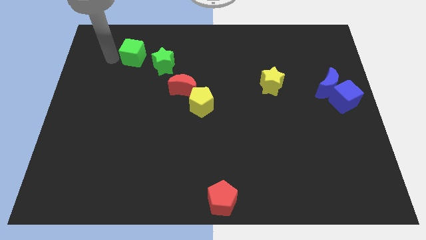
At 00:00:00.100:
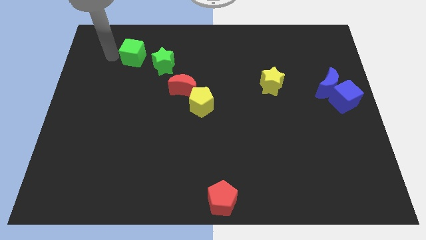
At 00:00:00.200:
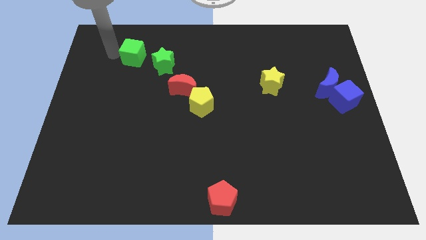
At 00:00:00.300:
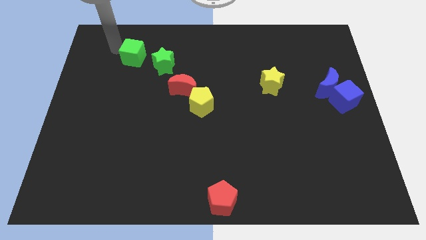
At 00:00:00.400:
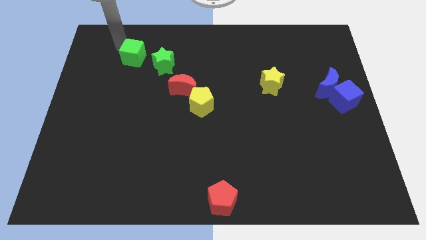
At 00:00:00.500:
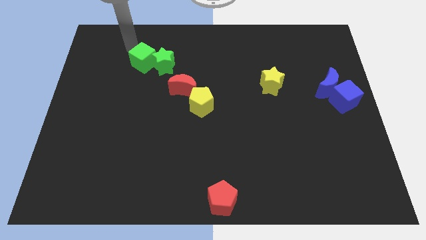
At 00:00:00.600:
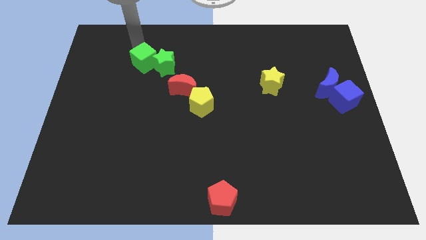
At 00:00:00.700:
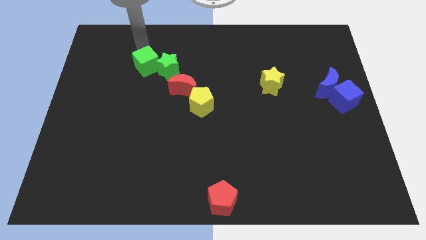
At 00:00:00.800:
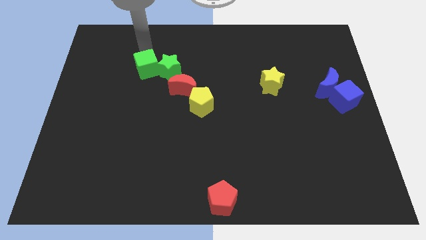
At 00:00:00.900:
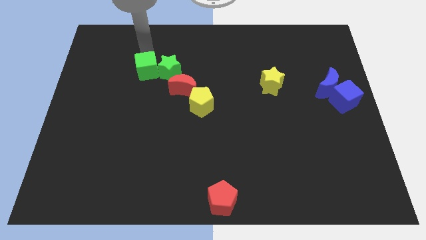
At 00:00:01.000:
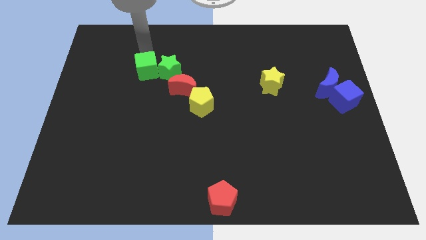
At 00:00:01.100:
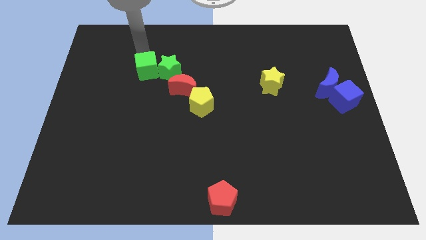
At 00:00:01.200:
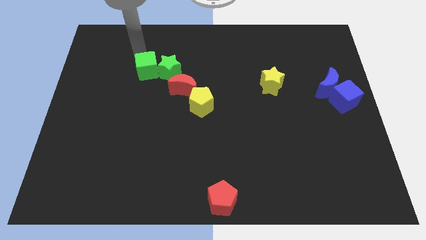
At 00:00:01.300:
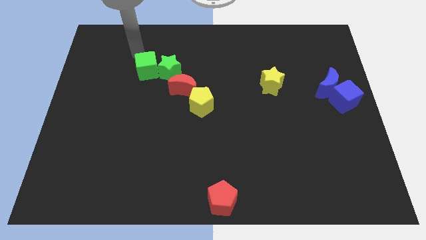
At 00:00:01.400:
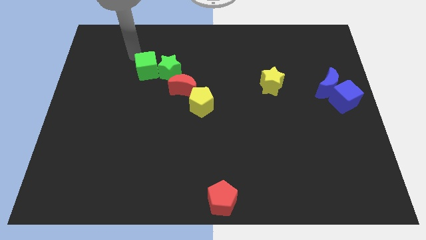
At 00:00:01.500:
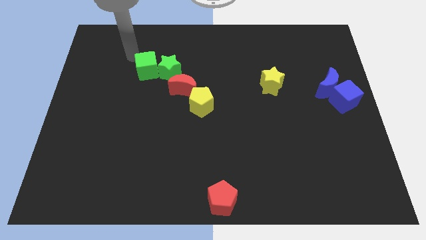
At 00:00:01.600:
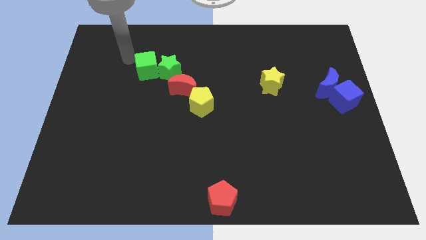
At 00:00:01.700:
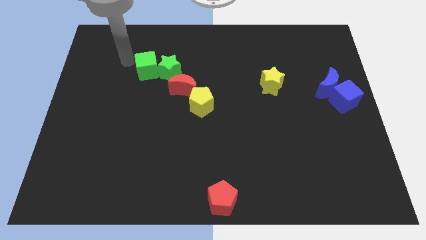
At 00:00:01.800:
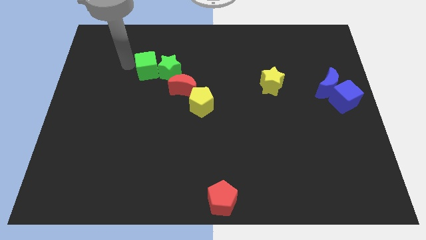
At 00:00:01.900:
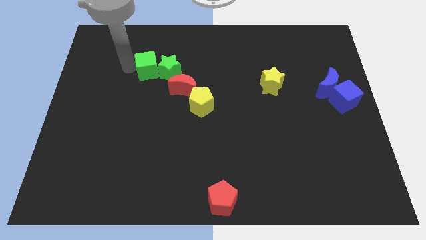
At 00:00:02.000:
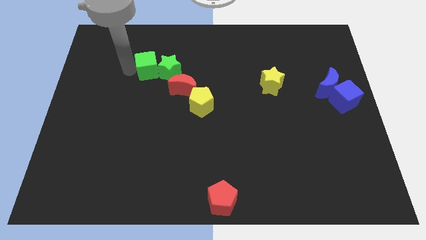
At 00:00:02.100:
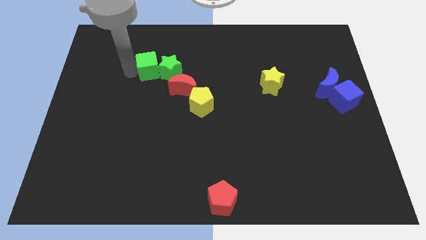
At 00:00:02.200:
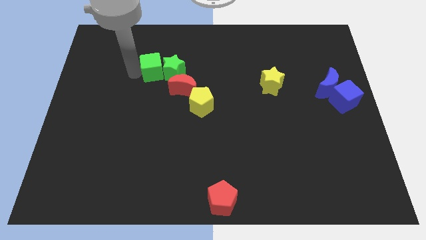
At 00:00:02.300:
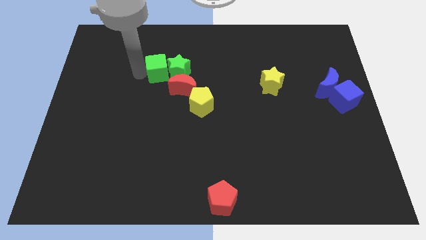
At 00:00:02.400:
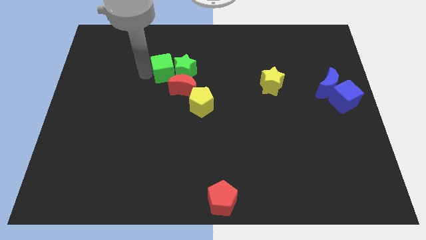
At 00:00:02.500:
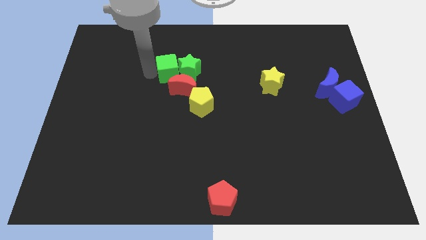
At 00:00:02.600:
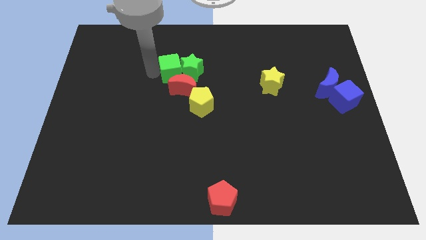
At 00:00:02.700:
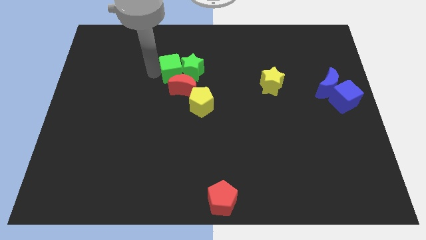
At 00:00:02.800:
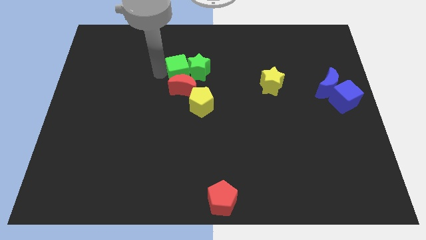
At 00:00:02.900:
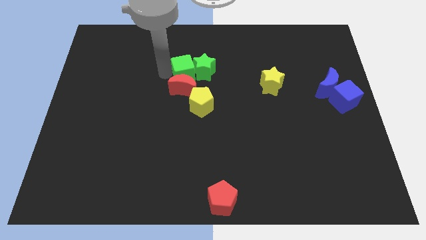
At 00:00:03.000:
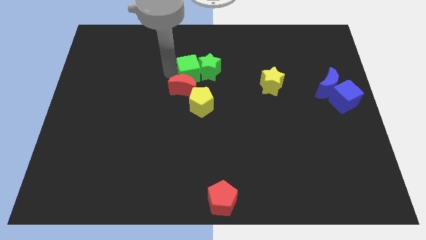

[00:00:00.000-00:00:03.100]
put the green cube at the top right of the red crescent

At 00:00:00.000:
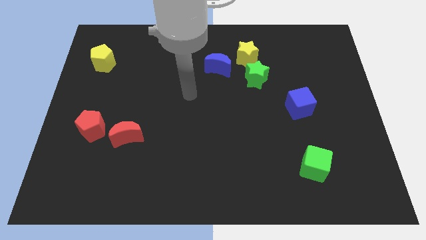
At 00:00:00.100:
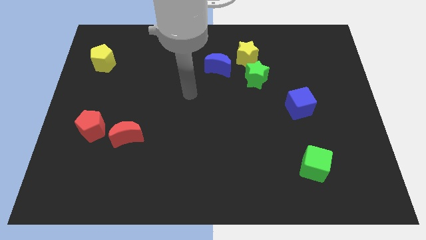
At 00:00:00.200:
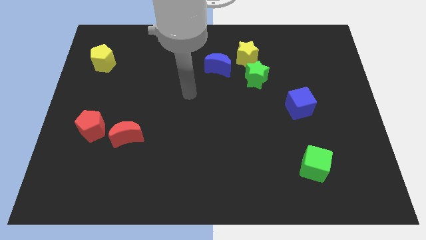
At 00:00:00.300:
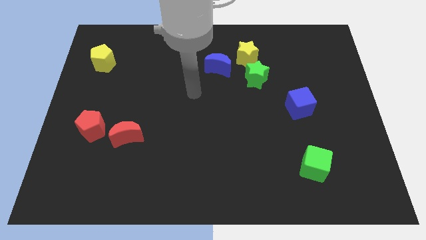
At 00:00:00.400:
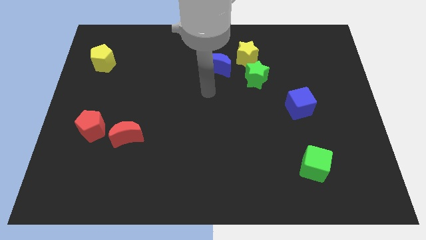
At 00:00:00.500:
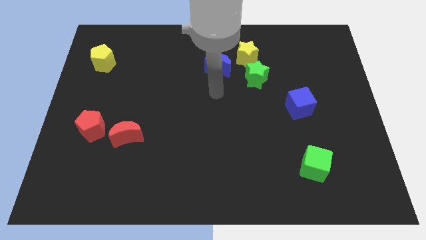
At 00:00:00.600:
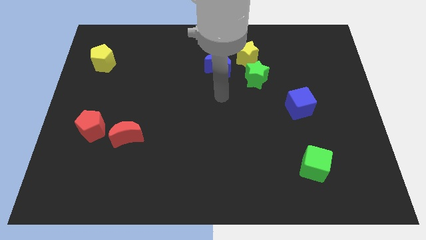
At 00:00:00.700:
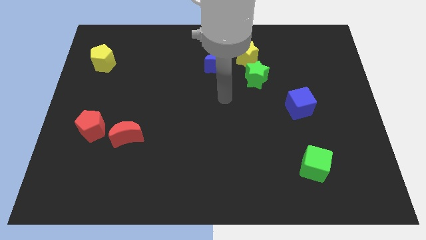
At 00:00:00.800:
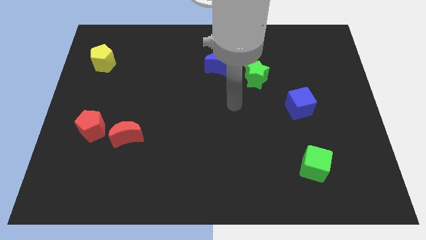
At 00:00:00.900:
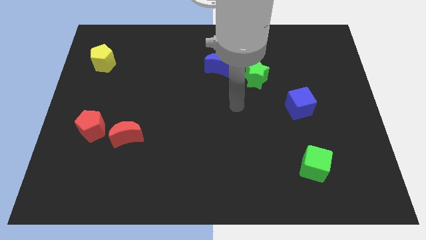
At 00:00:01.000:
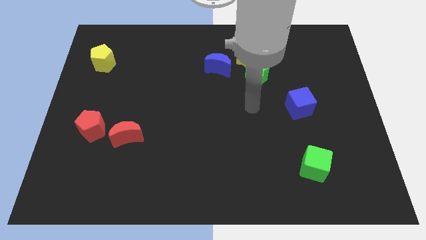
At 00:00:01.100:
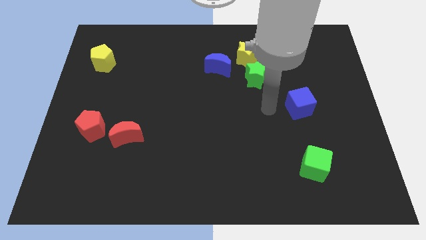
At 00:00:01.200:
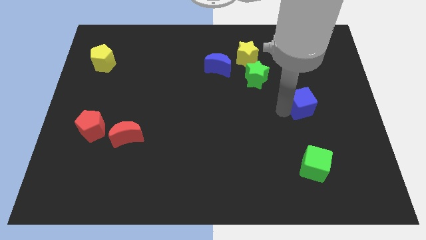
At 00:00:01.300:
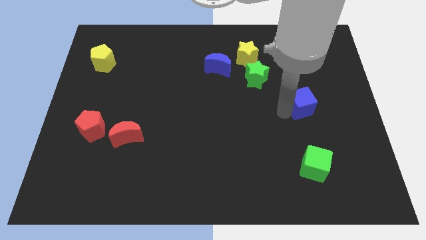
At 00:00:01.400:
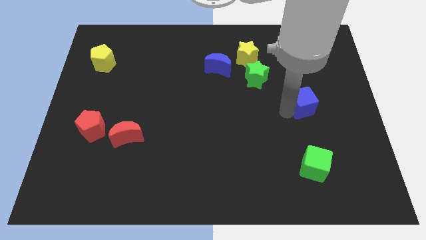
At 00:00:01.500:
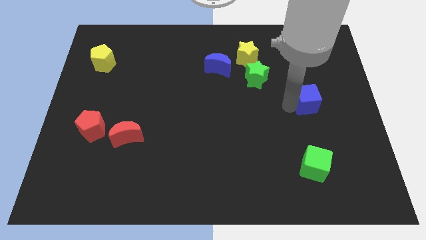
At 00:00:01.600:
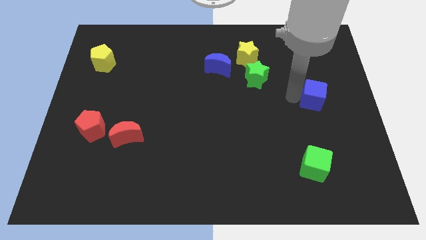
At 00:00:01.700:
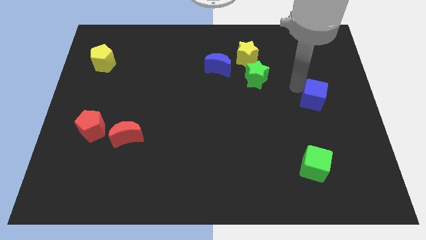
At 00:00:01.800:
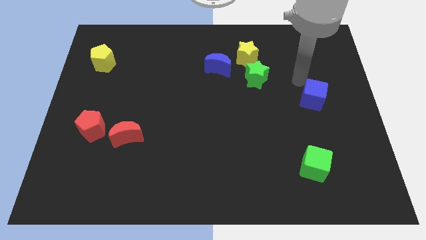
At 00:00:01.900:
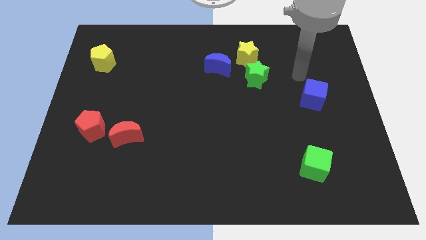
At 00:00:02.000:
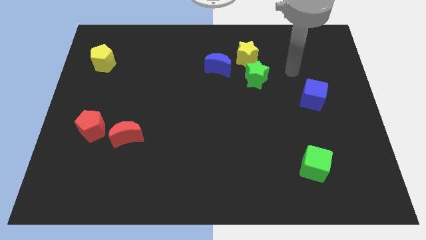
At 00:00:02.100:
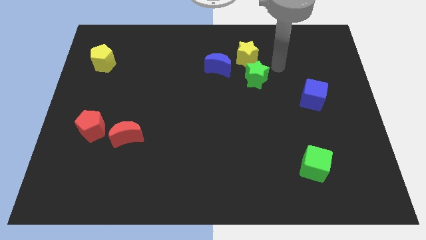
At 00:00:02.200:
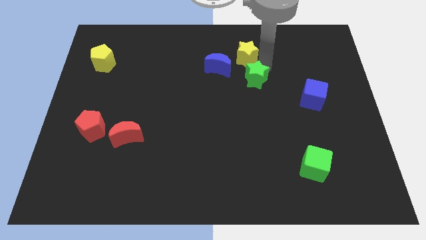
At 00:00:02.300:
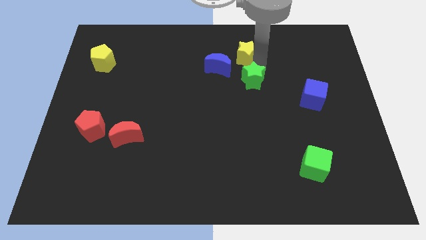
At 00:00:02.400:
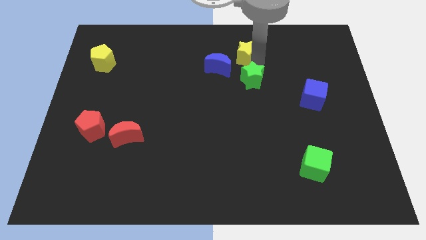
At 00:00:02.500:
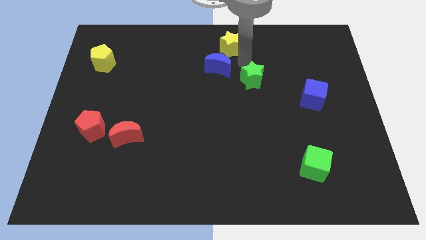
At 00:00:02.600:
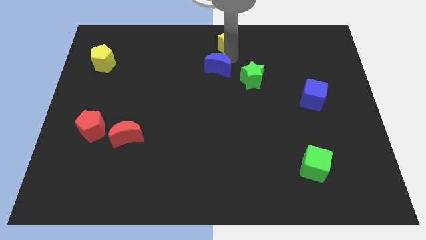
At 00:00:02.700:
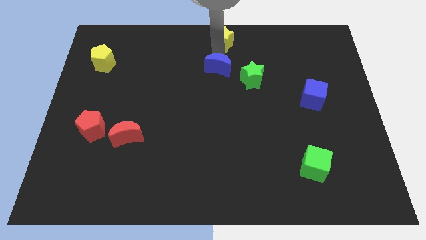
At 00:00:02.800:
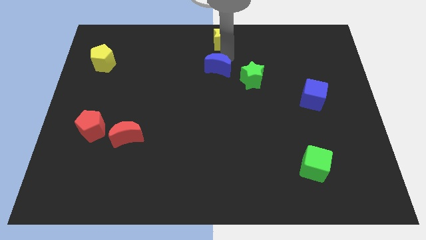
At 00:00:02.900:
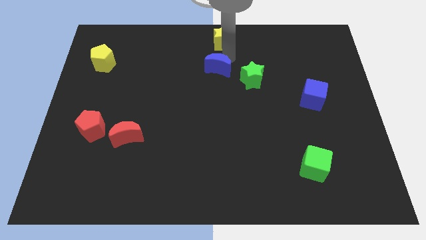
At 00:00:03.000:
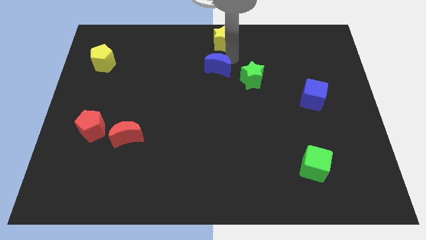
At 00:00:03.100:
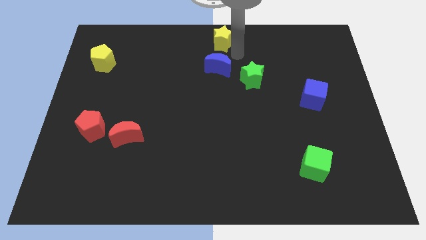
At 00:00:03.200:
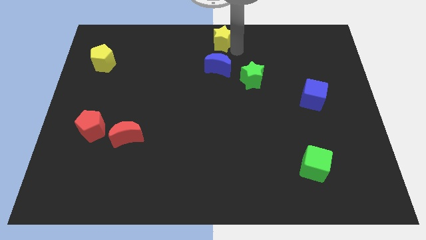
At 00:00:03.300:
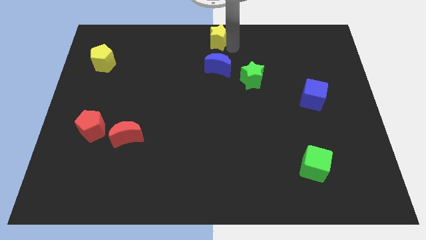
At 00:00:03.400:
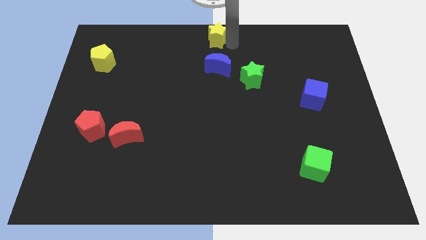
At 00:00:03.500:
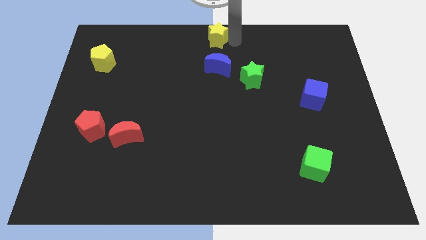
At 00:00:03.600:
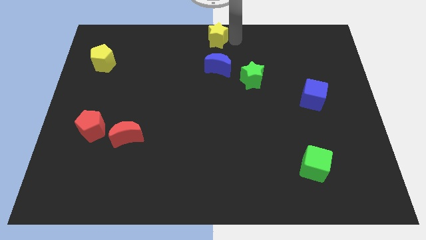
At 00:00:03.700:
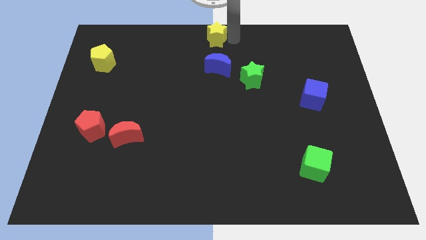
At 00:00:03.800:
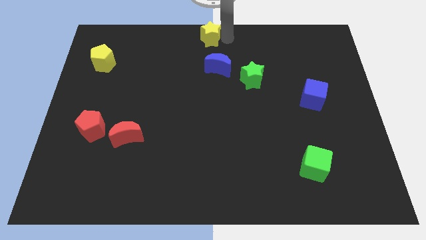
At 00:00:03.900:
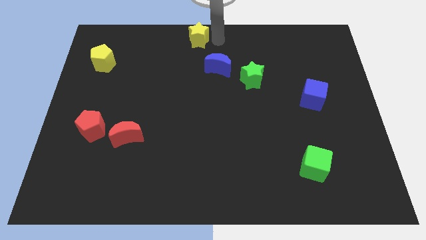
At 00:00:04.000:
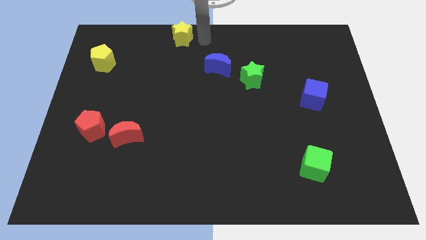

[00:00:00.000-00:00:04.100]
slide the yellow star to the top center of the board

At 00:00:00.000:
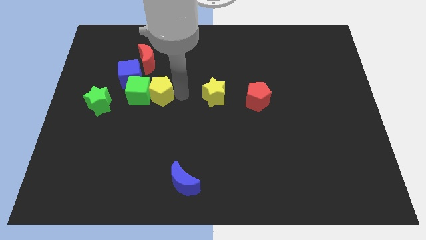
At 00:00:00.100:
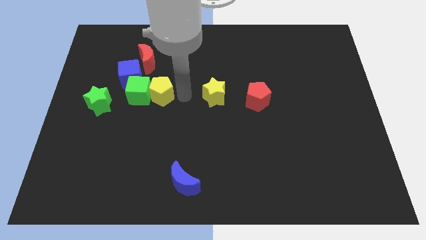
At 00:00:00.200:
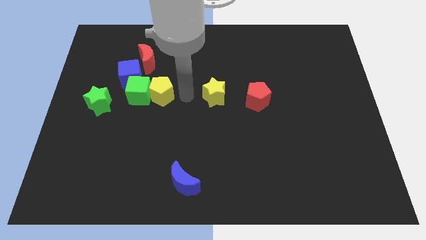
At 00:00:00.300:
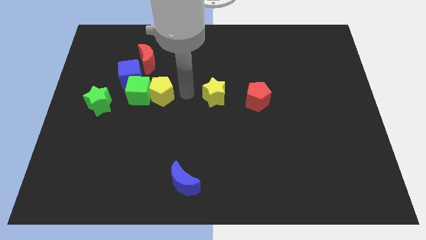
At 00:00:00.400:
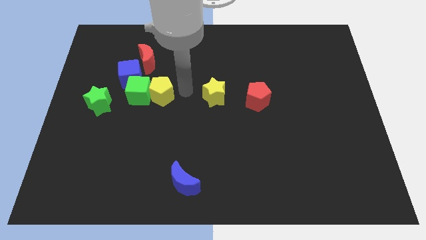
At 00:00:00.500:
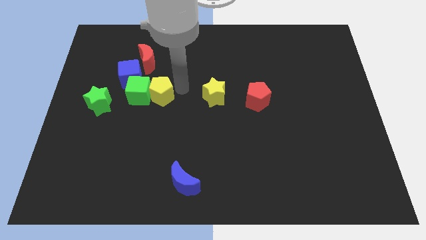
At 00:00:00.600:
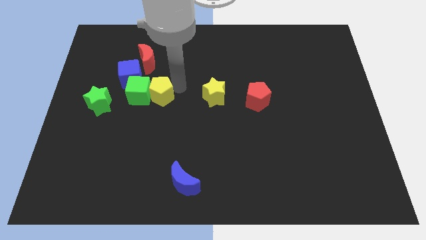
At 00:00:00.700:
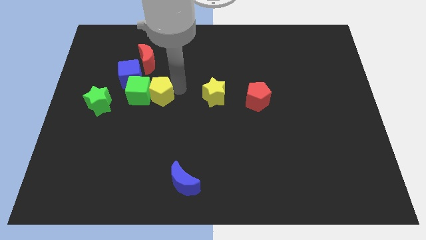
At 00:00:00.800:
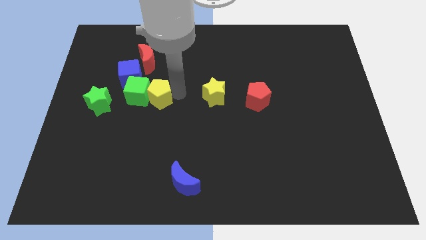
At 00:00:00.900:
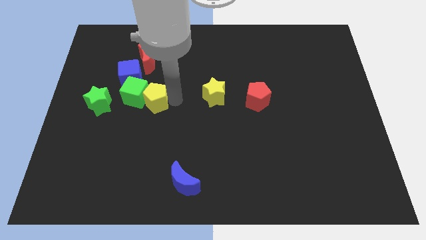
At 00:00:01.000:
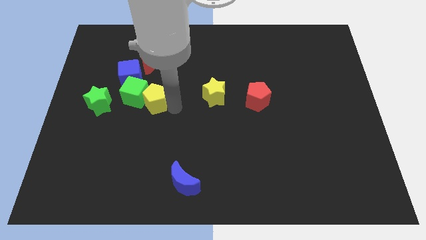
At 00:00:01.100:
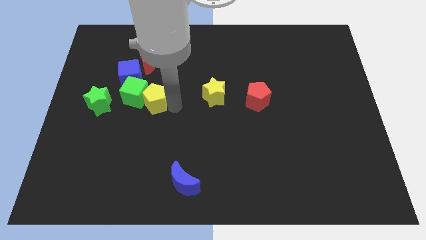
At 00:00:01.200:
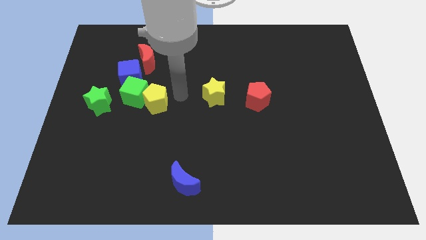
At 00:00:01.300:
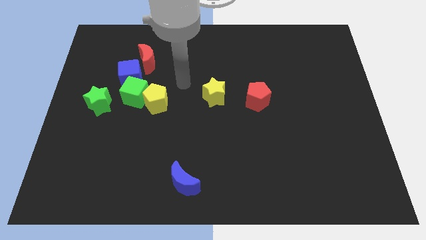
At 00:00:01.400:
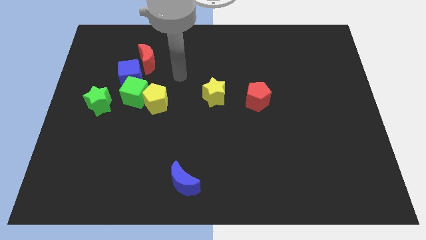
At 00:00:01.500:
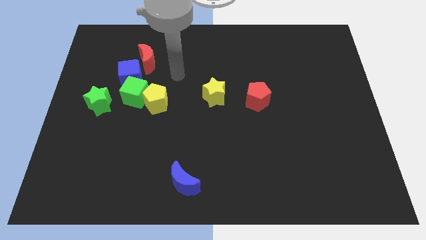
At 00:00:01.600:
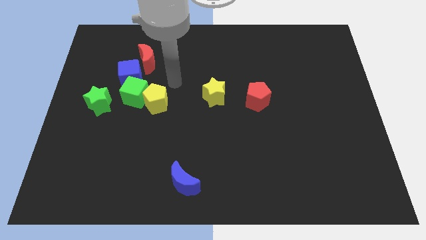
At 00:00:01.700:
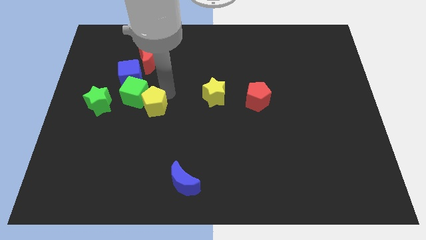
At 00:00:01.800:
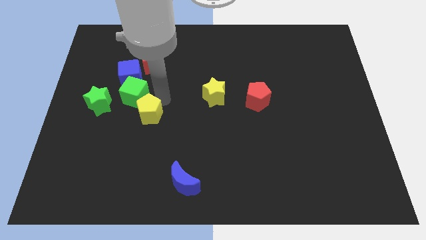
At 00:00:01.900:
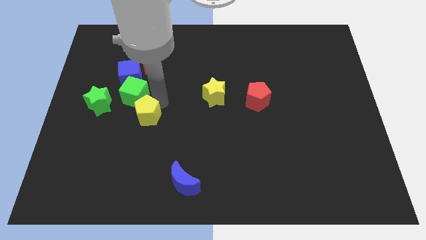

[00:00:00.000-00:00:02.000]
place the yellow pentagon below to the green cube
